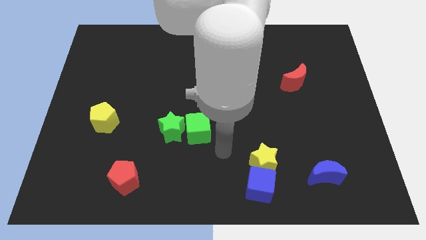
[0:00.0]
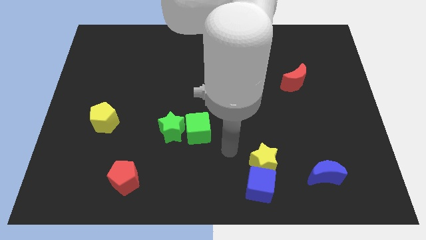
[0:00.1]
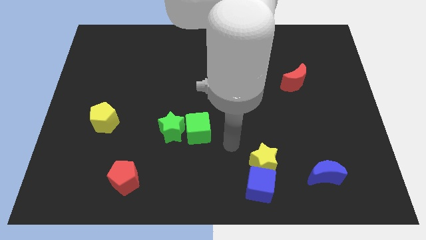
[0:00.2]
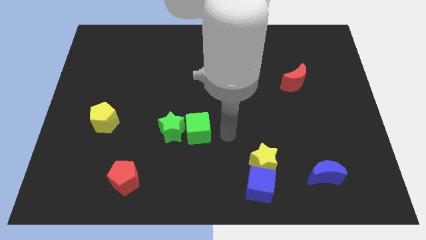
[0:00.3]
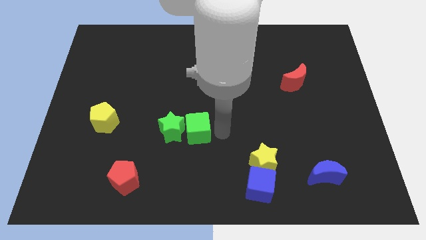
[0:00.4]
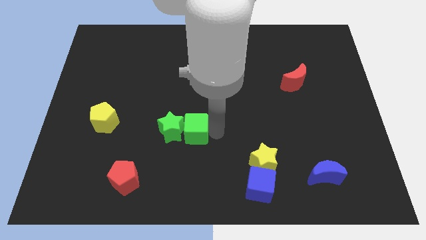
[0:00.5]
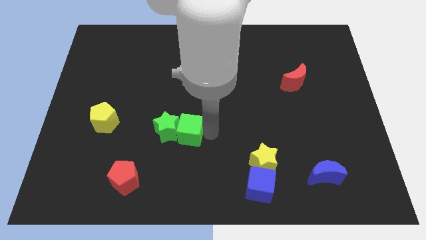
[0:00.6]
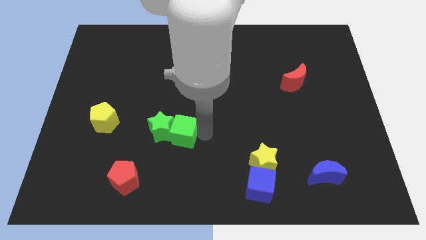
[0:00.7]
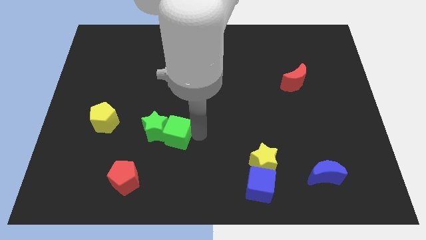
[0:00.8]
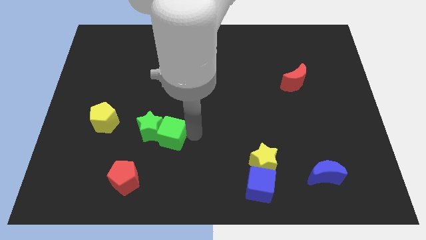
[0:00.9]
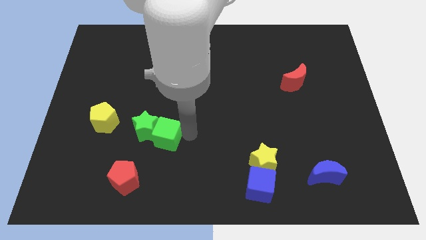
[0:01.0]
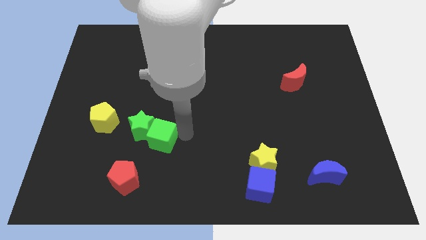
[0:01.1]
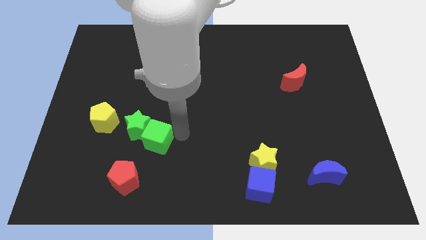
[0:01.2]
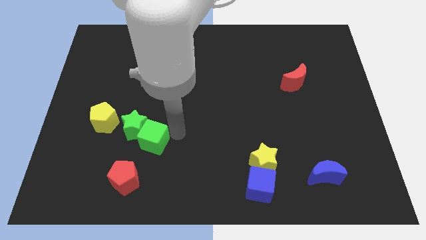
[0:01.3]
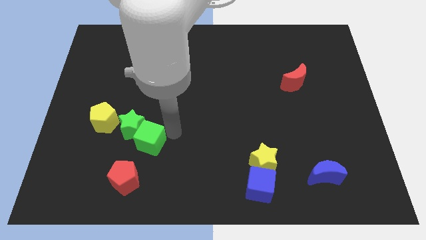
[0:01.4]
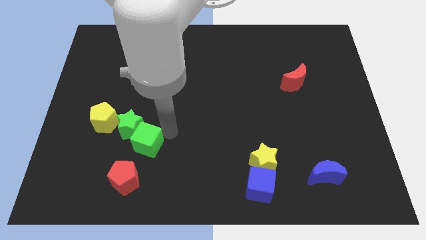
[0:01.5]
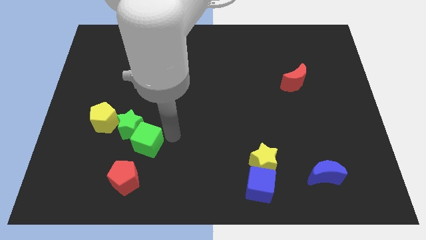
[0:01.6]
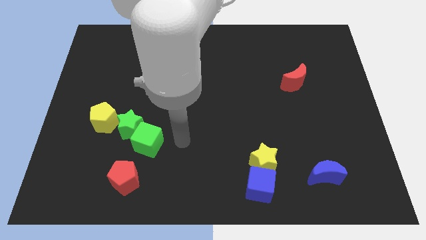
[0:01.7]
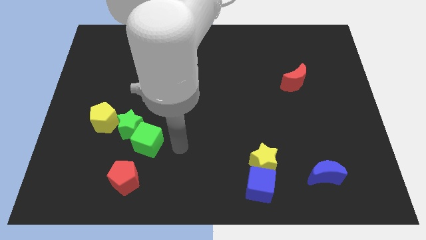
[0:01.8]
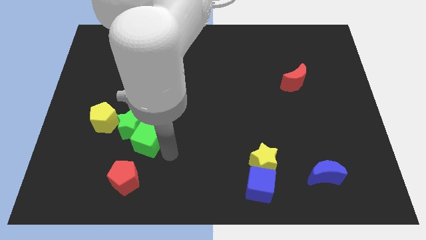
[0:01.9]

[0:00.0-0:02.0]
push the green star and green cube to the left side of the board

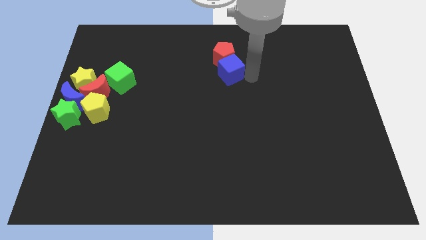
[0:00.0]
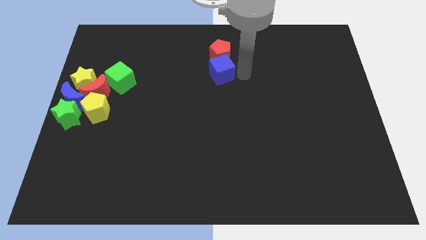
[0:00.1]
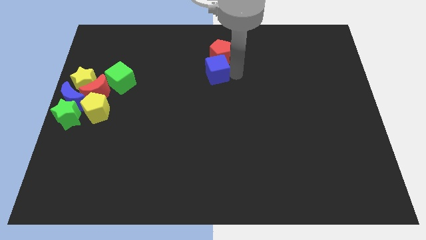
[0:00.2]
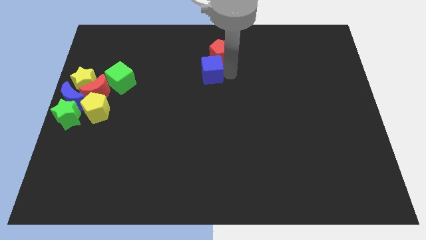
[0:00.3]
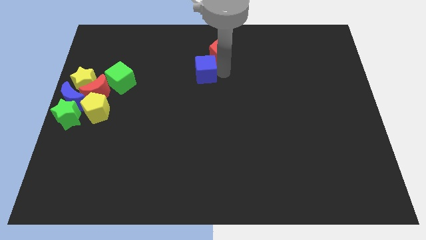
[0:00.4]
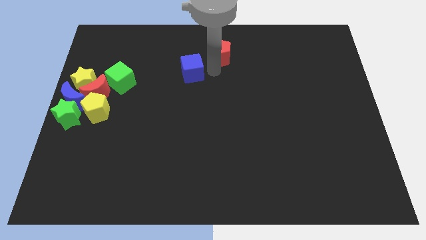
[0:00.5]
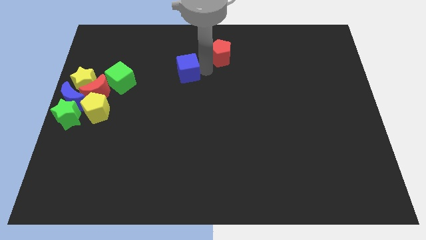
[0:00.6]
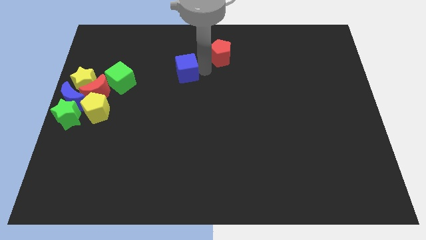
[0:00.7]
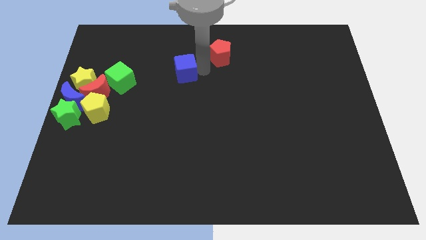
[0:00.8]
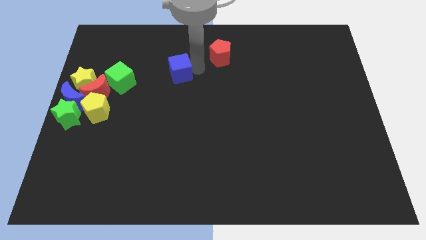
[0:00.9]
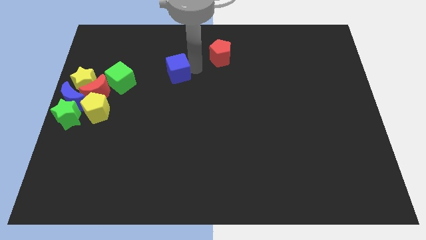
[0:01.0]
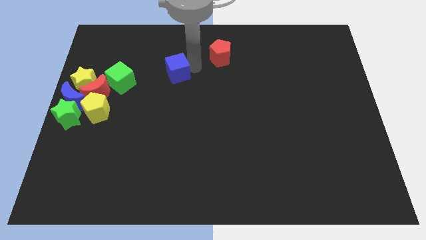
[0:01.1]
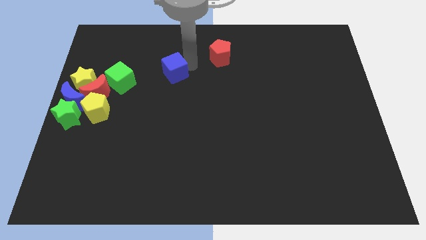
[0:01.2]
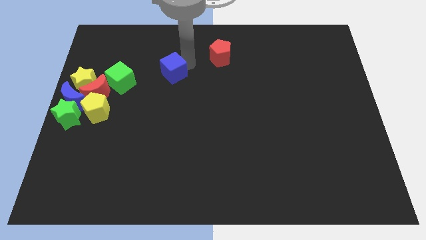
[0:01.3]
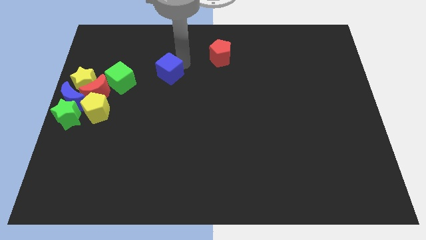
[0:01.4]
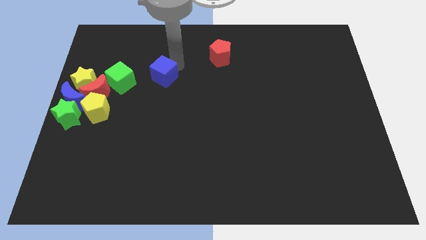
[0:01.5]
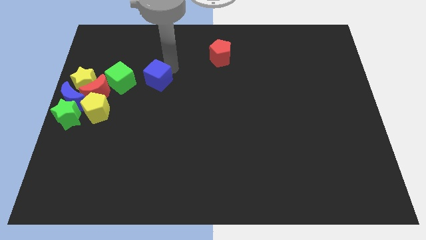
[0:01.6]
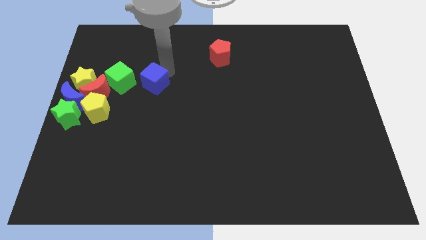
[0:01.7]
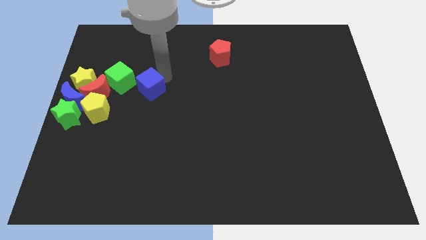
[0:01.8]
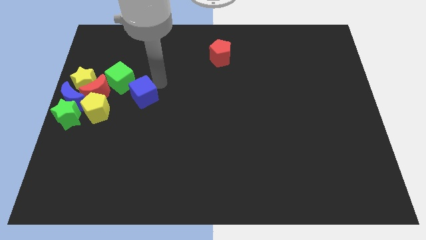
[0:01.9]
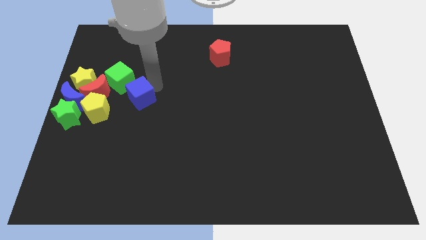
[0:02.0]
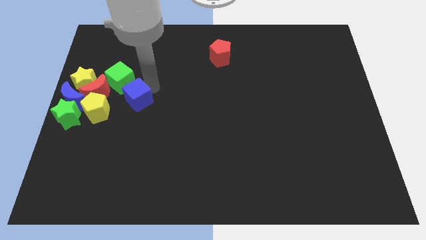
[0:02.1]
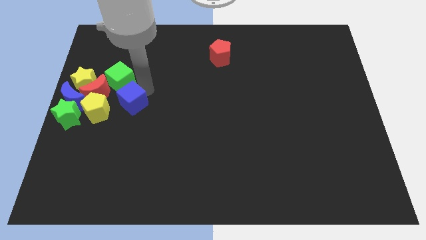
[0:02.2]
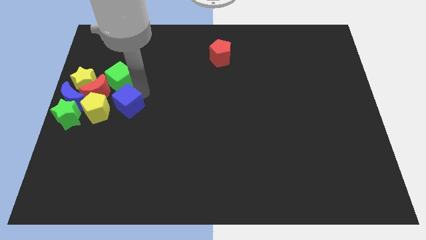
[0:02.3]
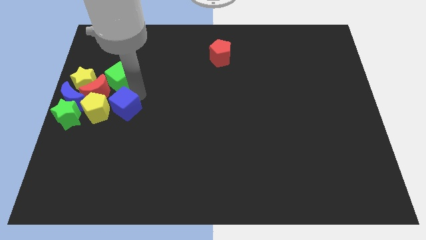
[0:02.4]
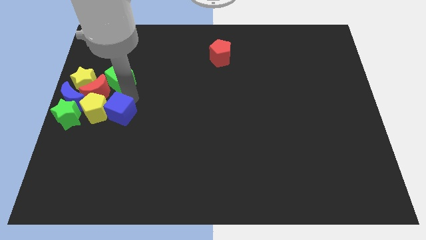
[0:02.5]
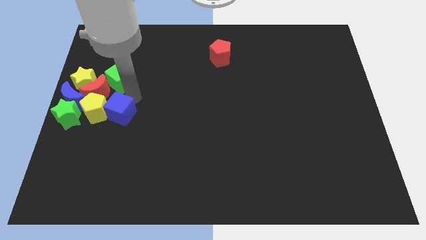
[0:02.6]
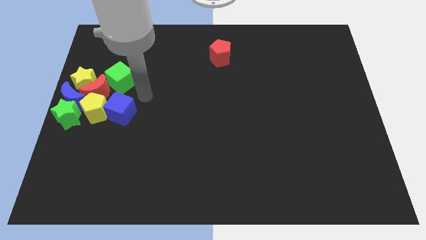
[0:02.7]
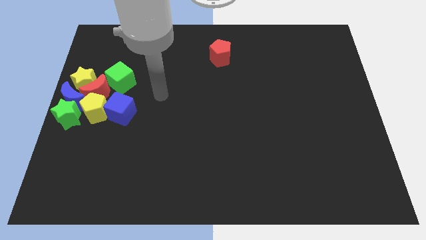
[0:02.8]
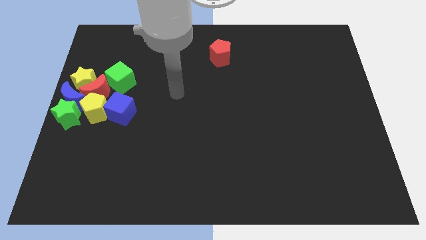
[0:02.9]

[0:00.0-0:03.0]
place the blue cube right to the yellow pentagon

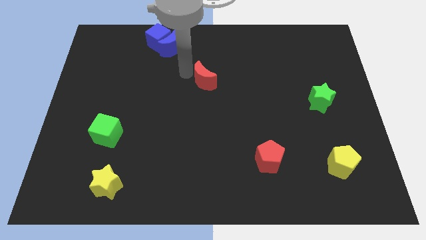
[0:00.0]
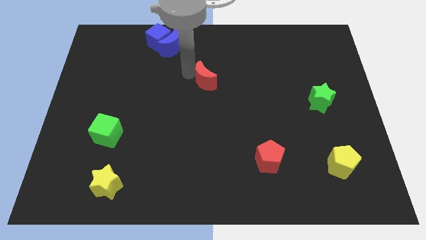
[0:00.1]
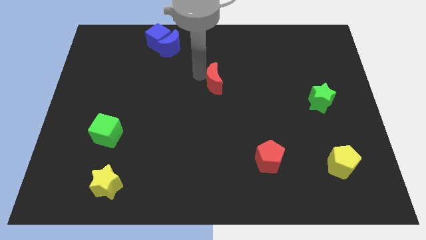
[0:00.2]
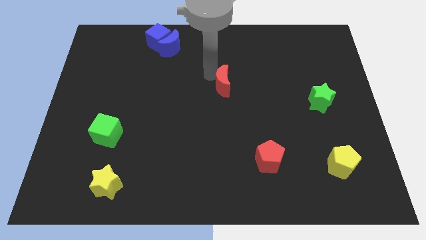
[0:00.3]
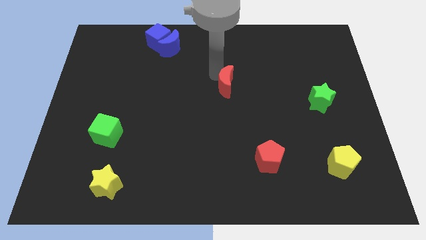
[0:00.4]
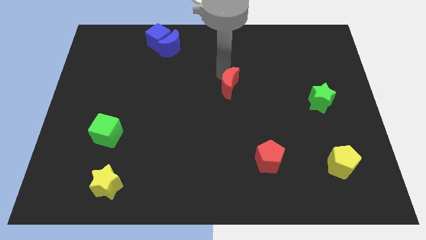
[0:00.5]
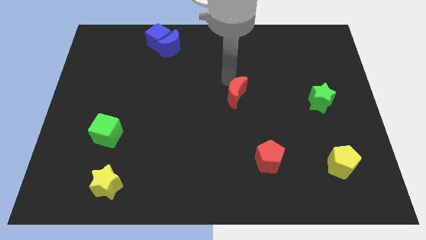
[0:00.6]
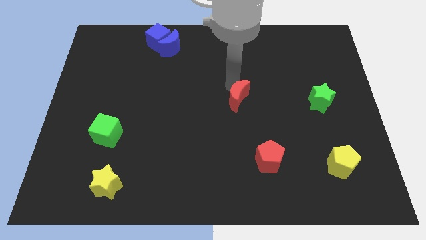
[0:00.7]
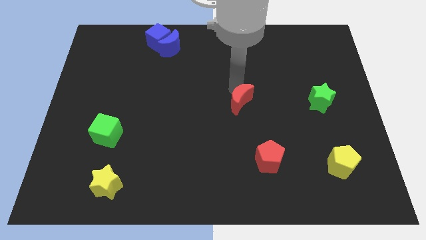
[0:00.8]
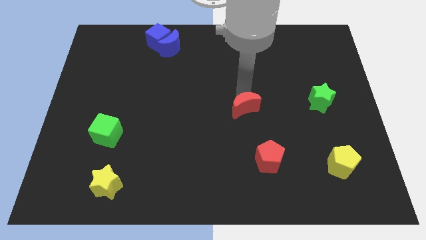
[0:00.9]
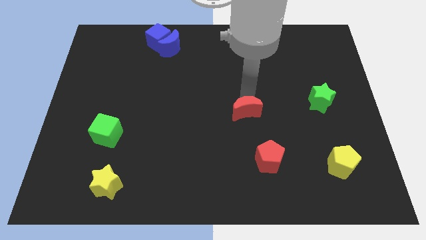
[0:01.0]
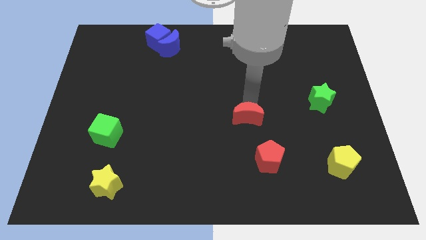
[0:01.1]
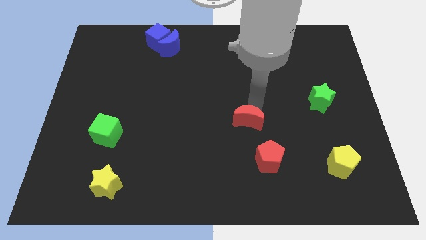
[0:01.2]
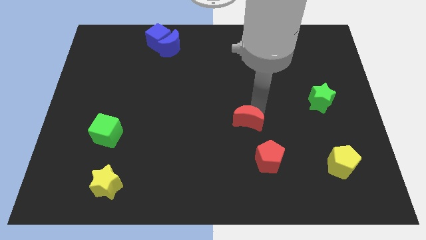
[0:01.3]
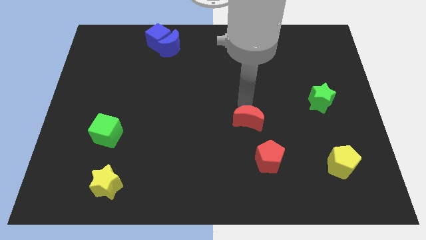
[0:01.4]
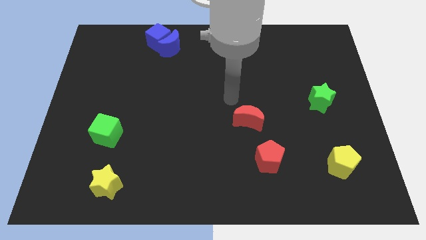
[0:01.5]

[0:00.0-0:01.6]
push the red crescent towards the red pentagon

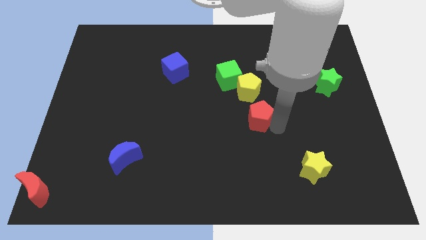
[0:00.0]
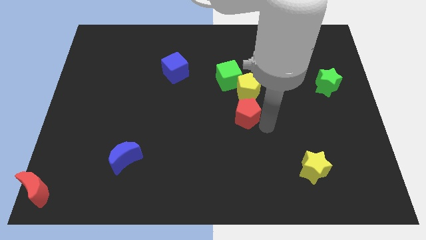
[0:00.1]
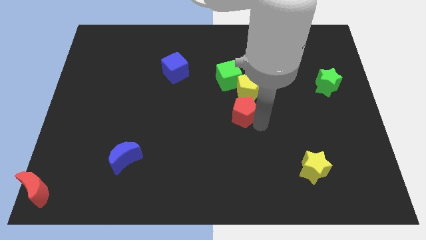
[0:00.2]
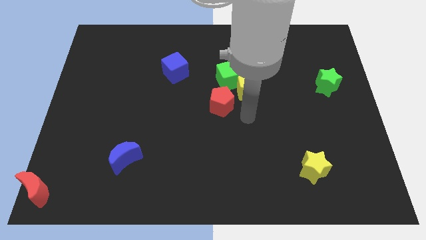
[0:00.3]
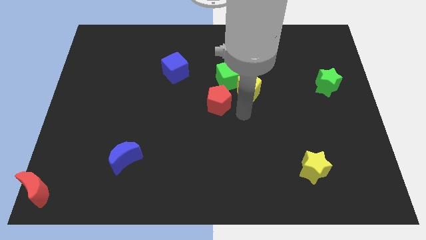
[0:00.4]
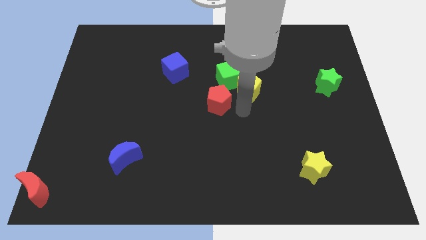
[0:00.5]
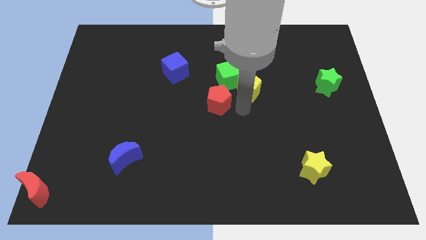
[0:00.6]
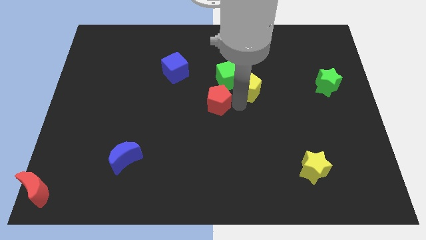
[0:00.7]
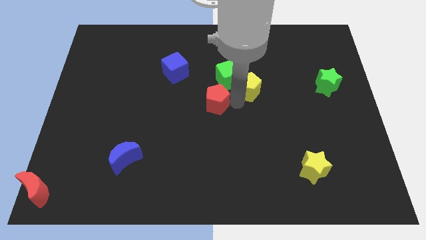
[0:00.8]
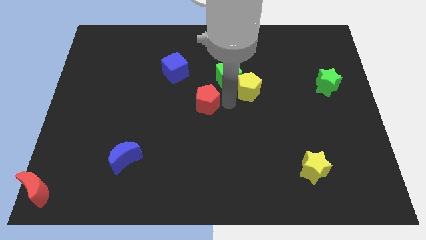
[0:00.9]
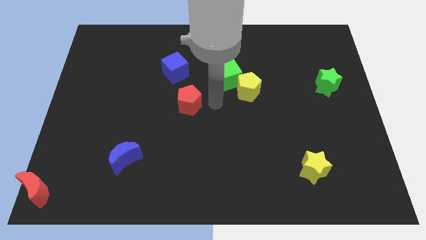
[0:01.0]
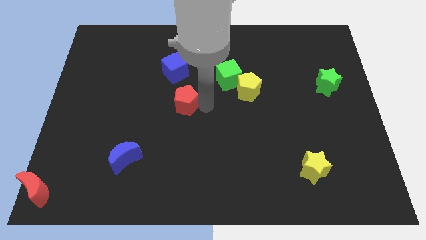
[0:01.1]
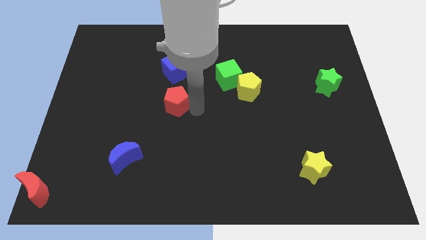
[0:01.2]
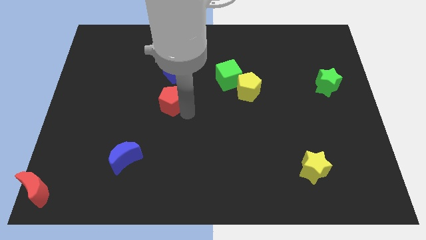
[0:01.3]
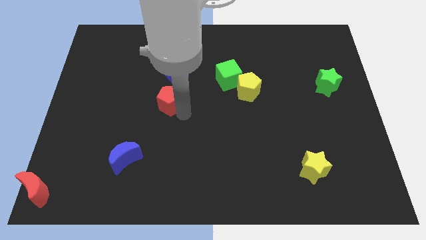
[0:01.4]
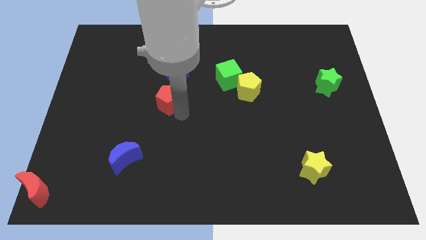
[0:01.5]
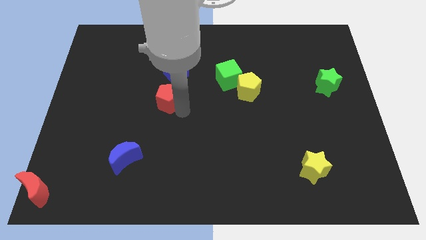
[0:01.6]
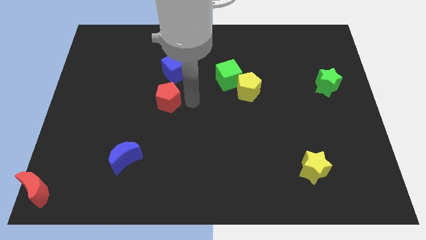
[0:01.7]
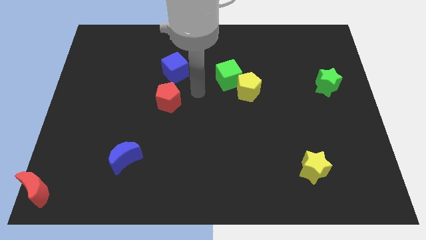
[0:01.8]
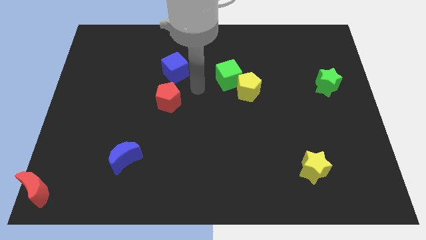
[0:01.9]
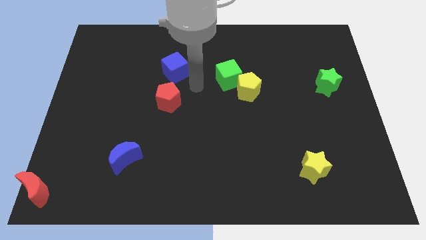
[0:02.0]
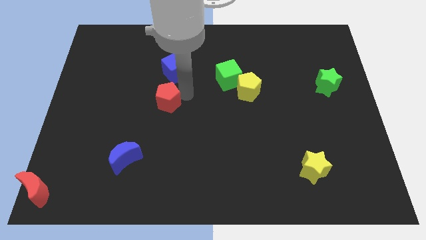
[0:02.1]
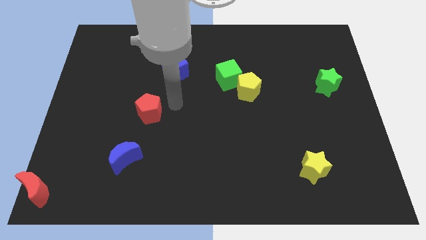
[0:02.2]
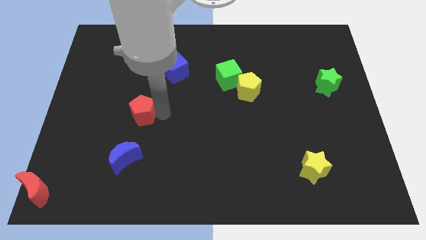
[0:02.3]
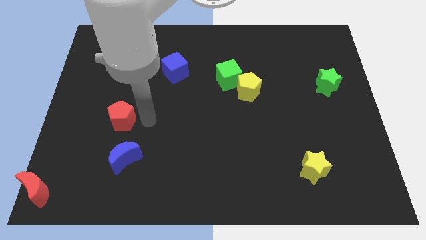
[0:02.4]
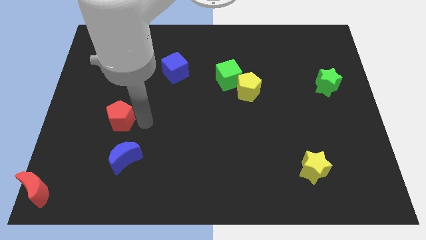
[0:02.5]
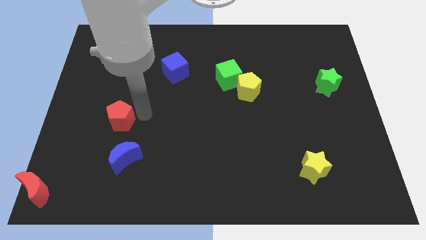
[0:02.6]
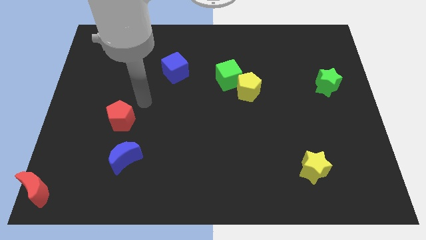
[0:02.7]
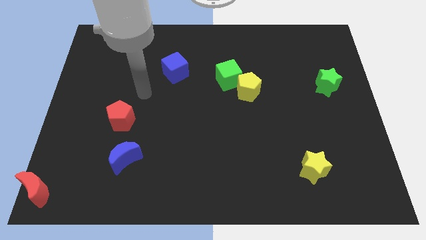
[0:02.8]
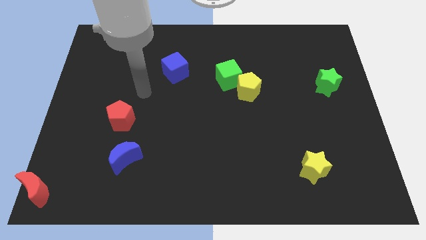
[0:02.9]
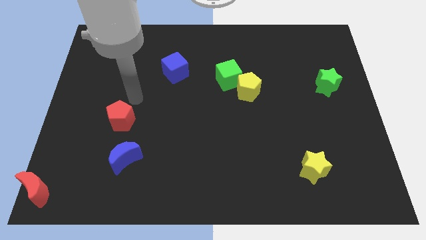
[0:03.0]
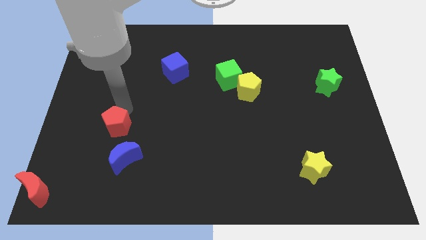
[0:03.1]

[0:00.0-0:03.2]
adjust the red pentagon on the top of the blue moon
